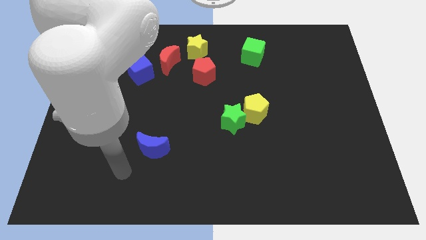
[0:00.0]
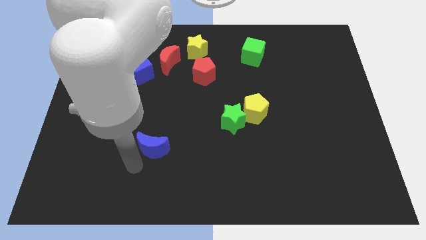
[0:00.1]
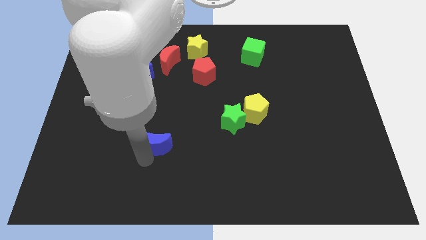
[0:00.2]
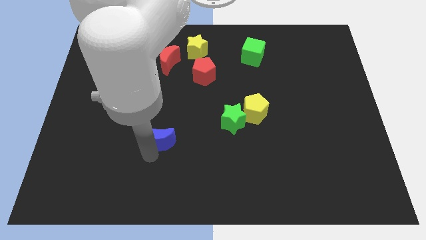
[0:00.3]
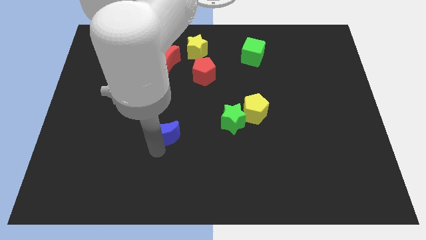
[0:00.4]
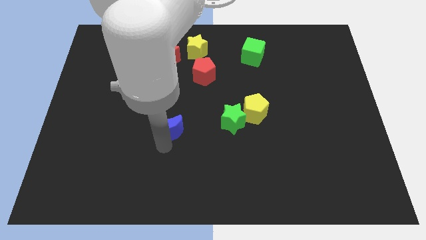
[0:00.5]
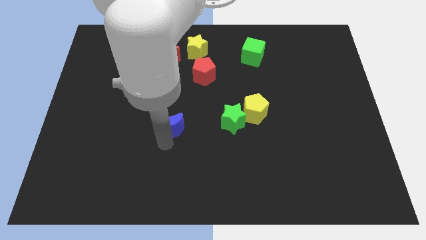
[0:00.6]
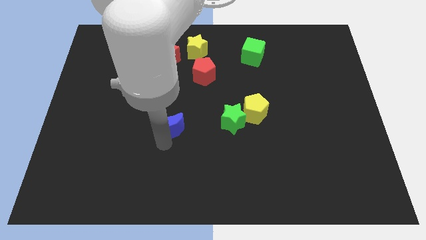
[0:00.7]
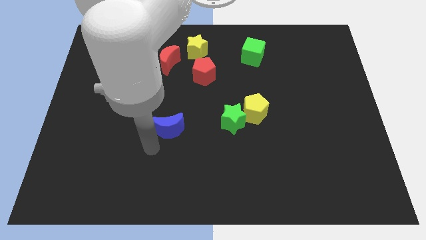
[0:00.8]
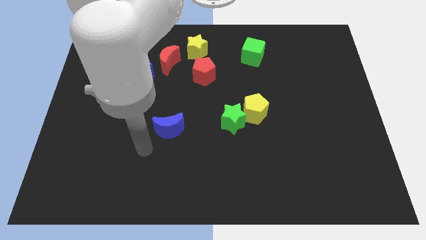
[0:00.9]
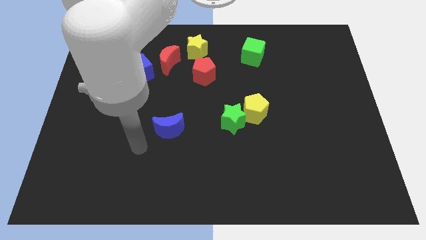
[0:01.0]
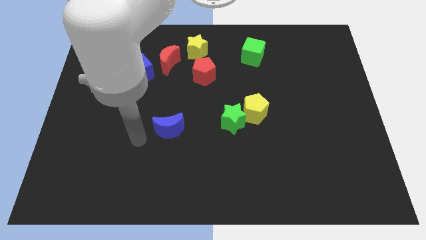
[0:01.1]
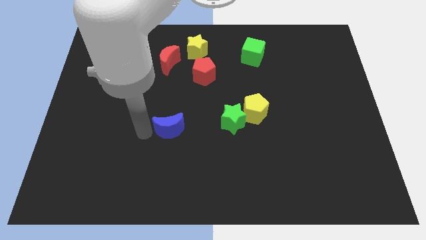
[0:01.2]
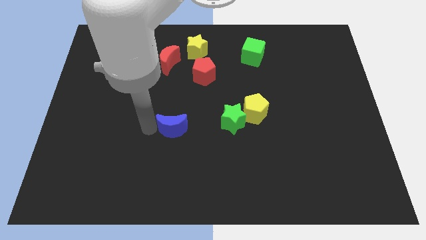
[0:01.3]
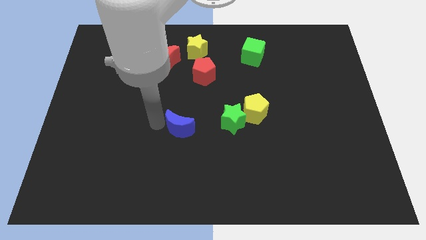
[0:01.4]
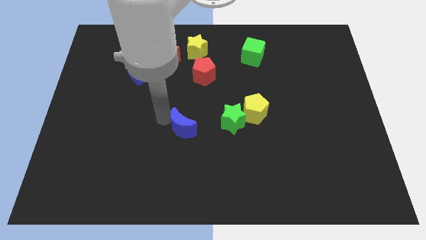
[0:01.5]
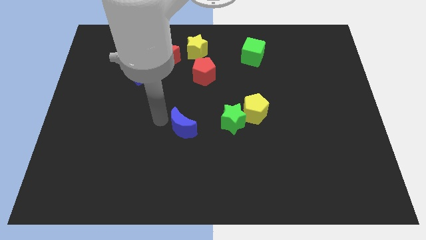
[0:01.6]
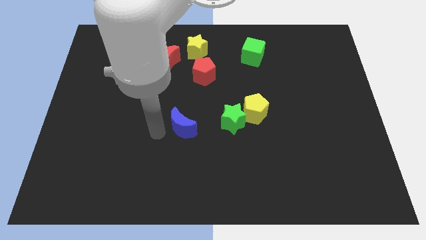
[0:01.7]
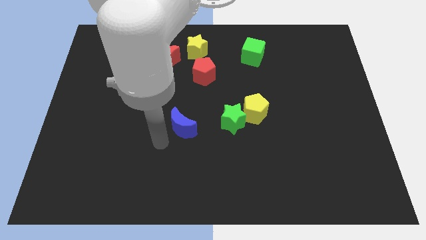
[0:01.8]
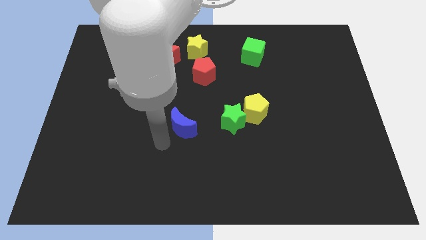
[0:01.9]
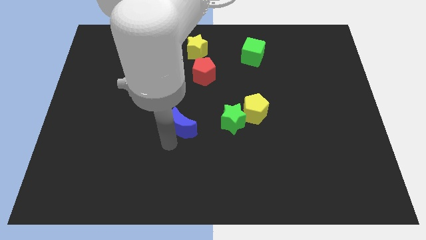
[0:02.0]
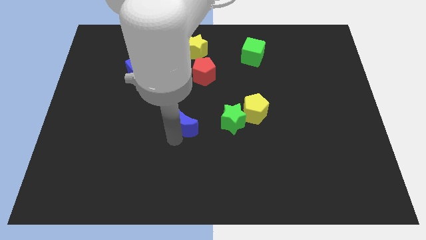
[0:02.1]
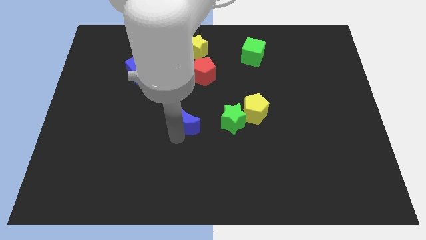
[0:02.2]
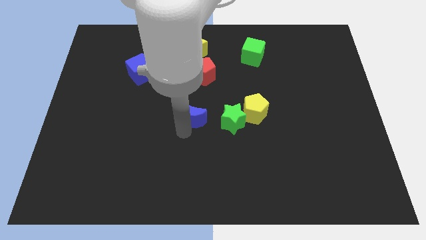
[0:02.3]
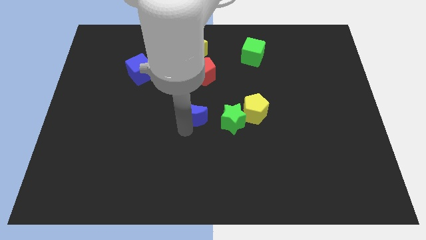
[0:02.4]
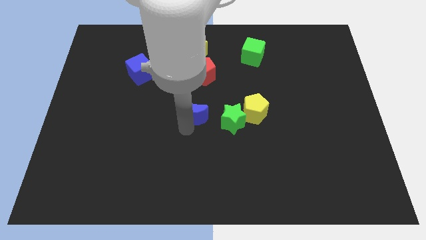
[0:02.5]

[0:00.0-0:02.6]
move the blue moon down to the red pentagon

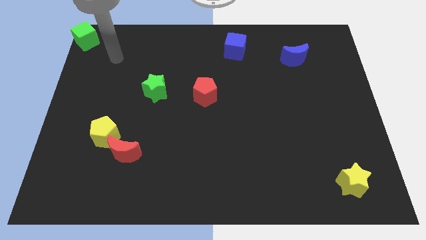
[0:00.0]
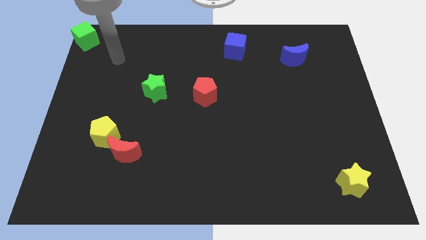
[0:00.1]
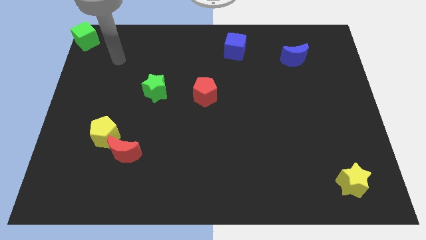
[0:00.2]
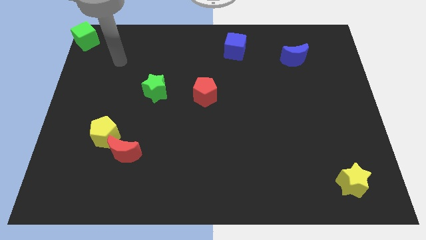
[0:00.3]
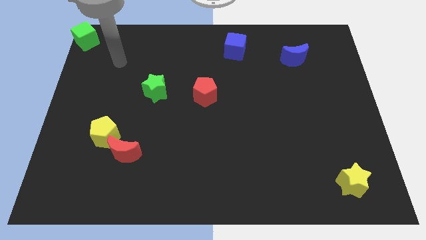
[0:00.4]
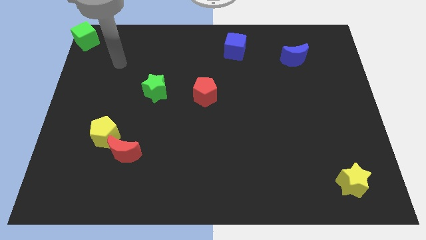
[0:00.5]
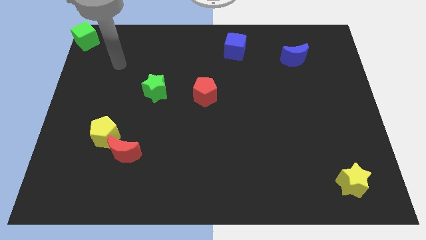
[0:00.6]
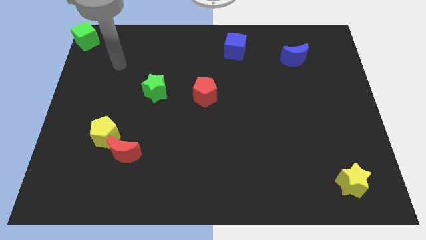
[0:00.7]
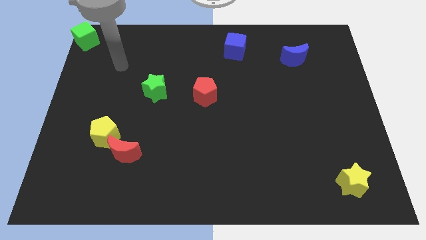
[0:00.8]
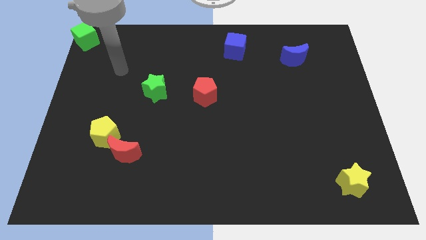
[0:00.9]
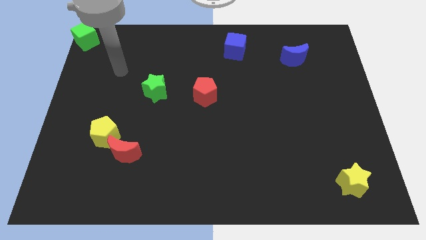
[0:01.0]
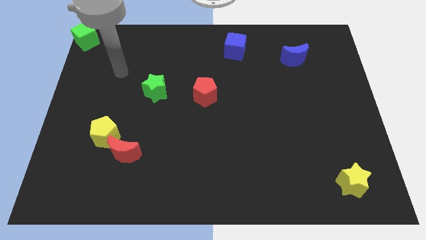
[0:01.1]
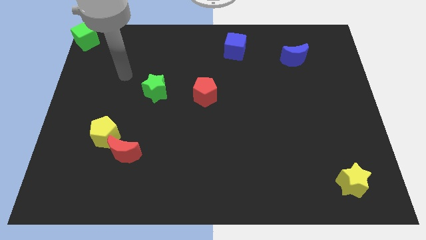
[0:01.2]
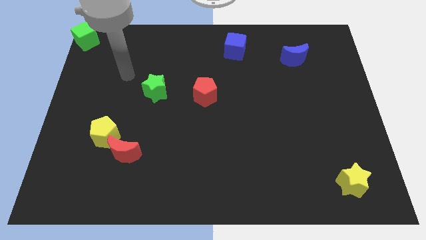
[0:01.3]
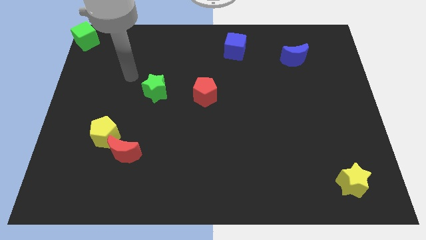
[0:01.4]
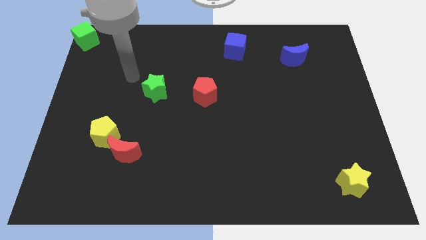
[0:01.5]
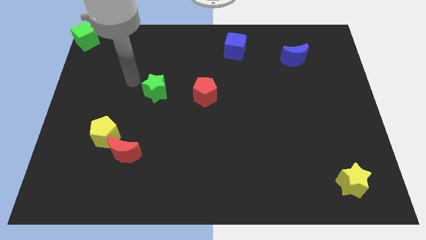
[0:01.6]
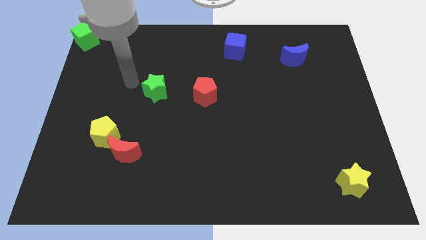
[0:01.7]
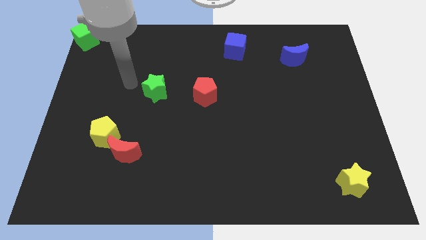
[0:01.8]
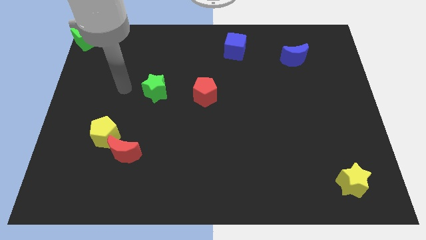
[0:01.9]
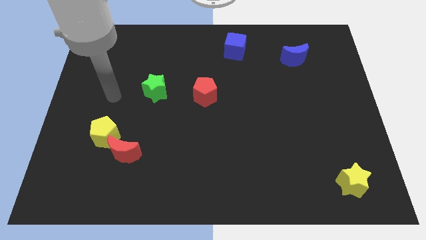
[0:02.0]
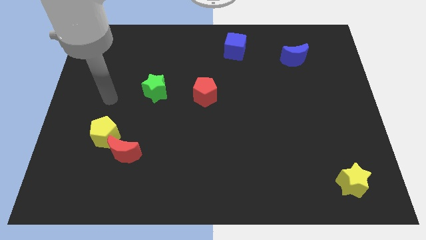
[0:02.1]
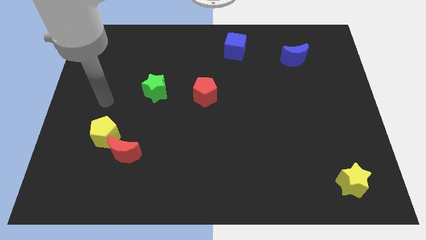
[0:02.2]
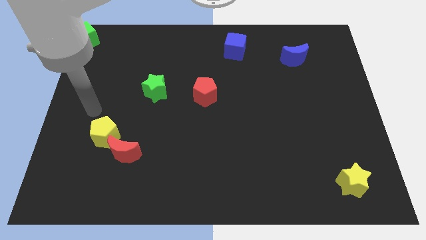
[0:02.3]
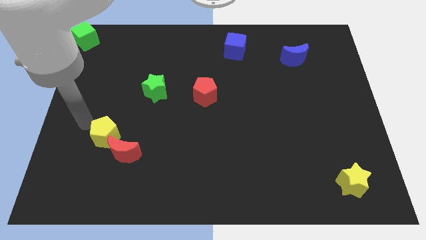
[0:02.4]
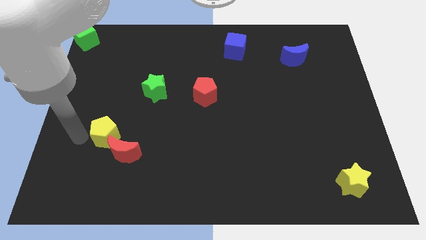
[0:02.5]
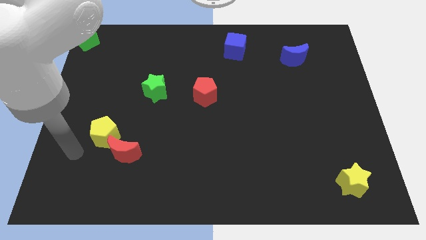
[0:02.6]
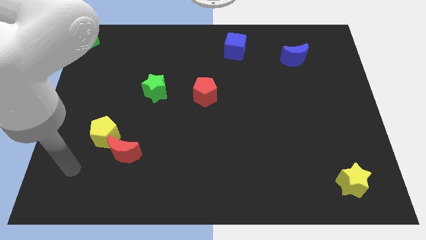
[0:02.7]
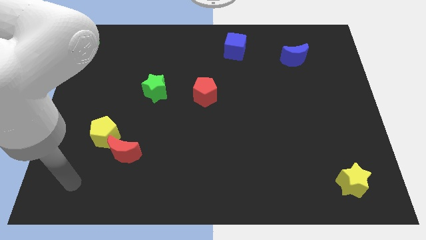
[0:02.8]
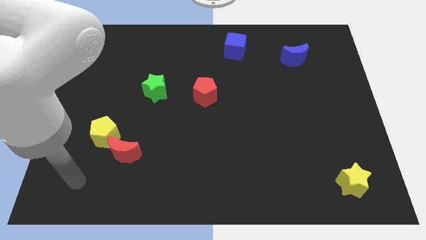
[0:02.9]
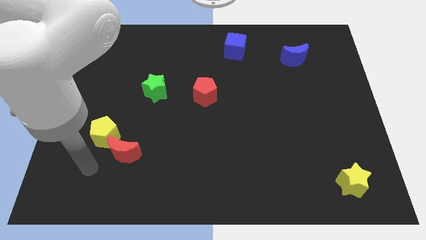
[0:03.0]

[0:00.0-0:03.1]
move your arm away from the green cube

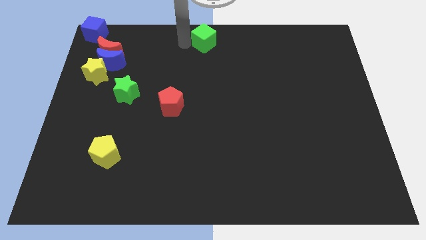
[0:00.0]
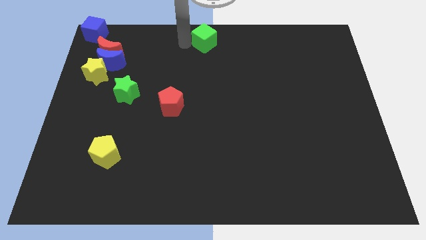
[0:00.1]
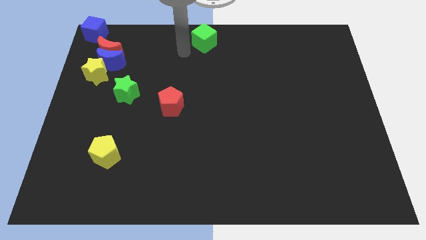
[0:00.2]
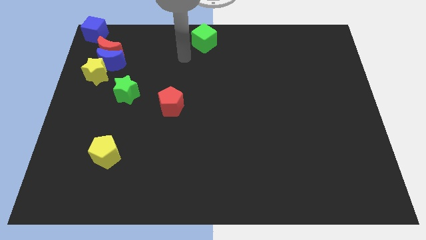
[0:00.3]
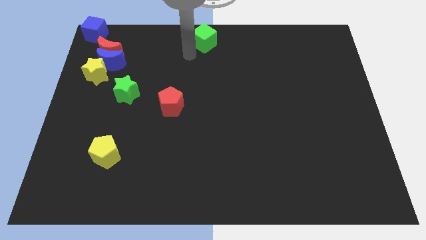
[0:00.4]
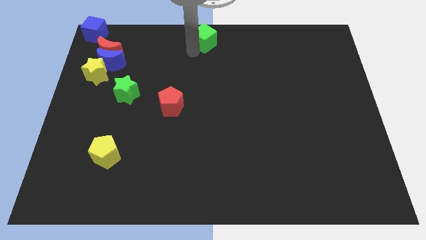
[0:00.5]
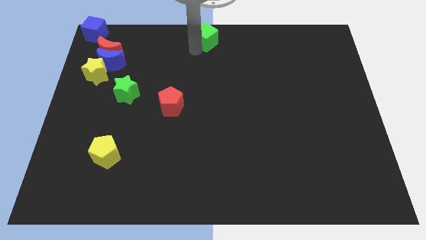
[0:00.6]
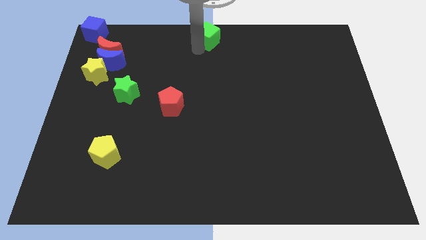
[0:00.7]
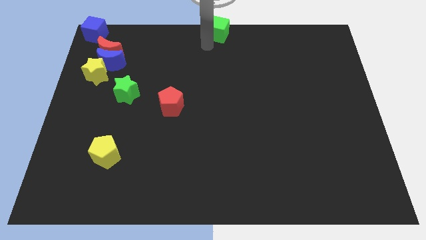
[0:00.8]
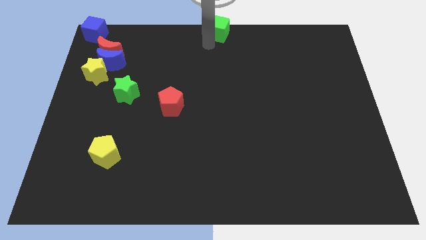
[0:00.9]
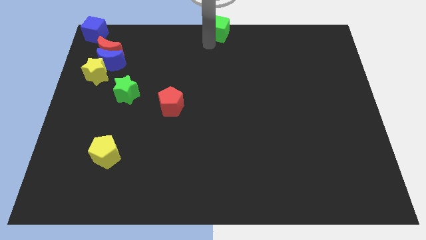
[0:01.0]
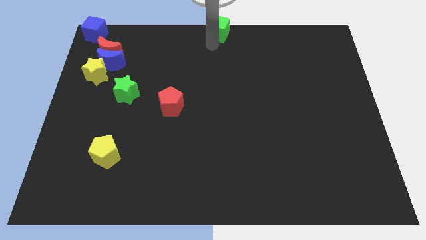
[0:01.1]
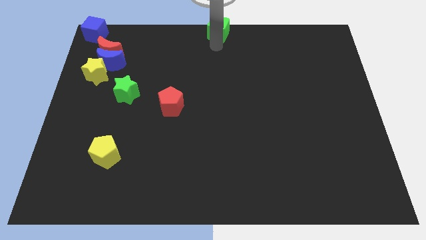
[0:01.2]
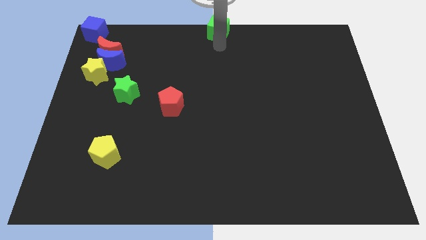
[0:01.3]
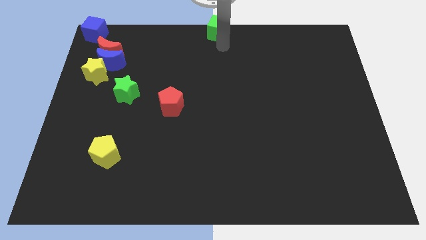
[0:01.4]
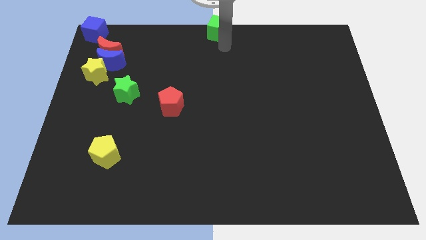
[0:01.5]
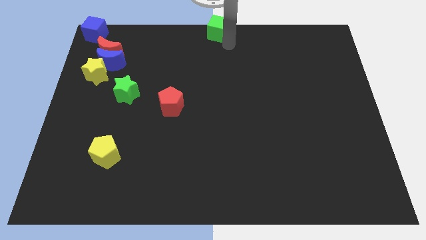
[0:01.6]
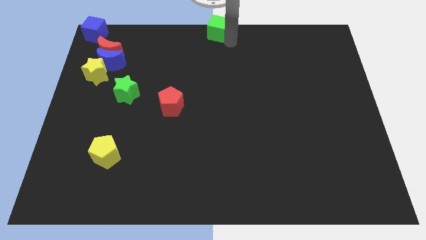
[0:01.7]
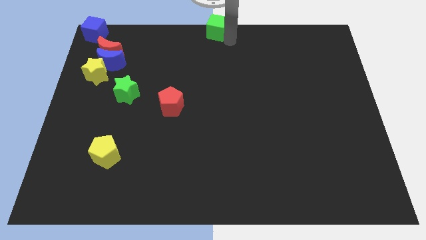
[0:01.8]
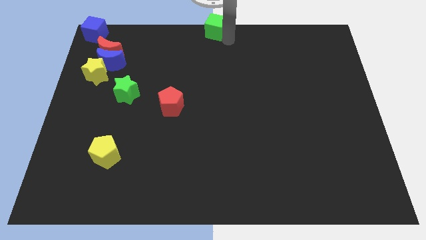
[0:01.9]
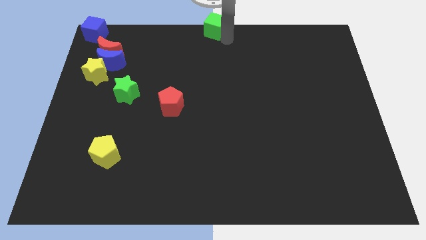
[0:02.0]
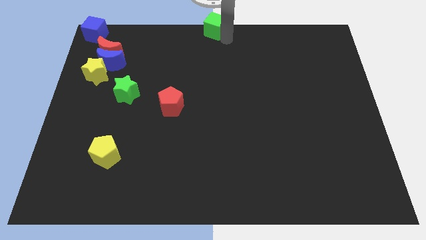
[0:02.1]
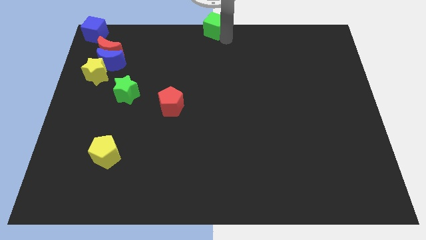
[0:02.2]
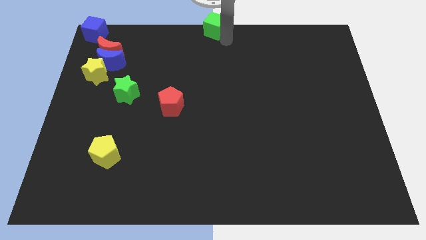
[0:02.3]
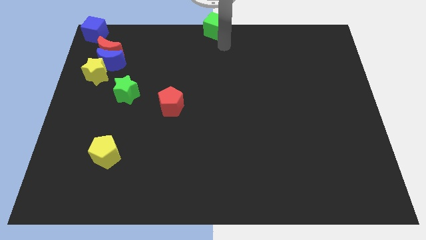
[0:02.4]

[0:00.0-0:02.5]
place green cube at the top center of the board

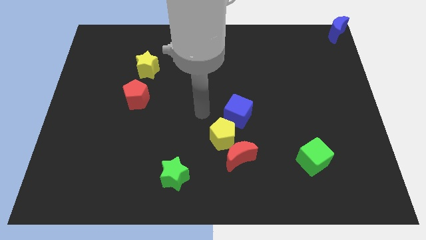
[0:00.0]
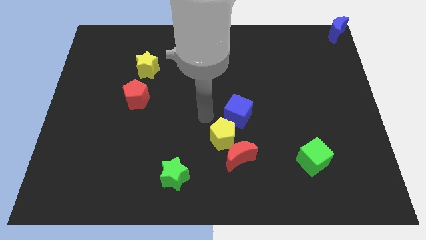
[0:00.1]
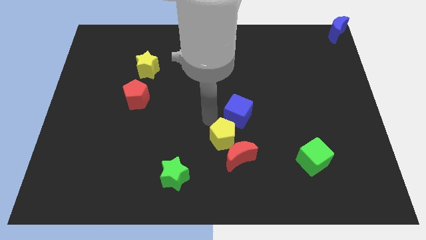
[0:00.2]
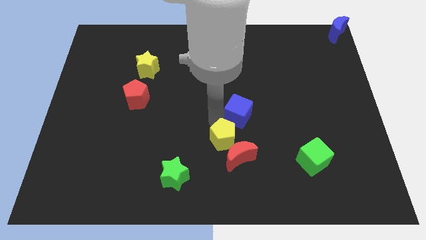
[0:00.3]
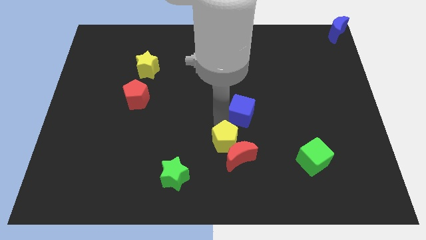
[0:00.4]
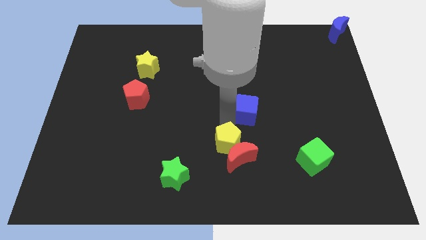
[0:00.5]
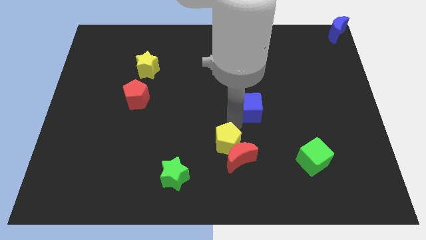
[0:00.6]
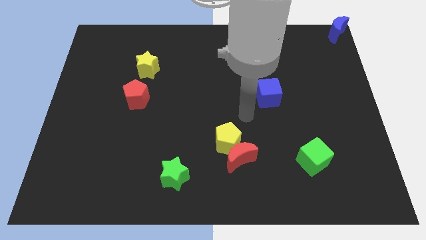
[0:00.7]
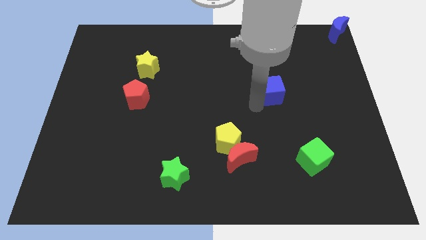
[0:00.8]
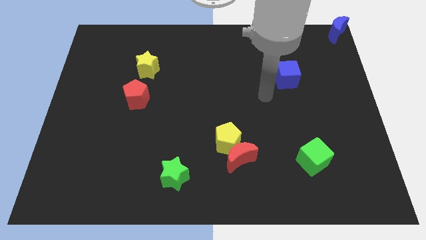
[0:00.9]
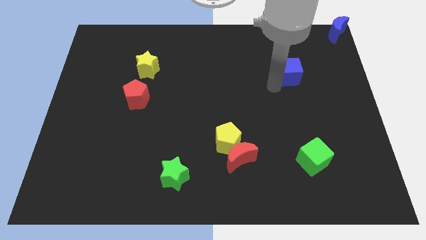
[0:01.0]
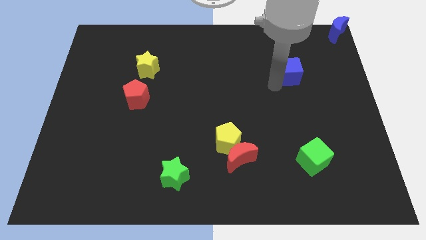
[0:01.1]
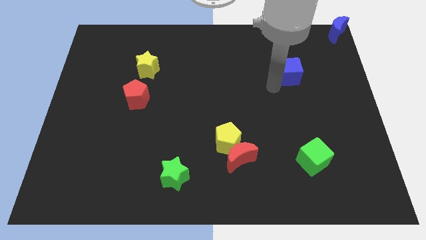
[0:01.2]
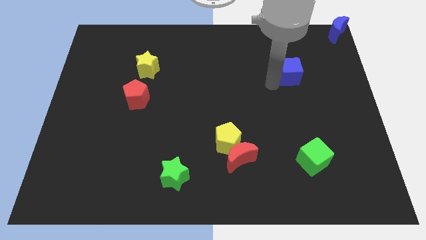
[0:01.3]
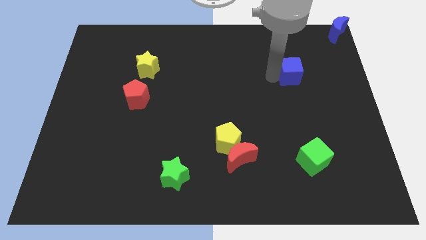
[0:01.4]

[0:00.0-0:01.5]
separate the blue cube from the yellow pentagon
